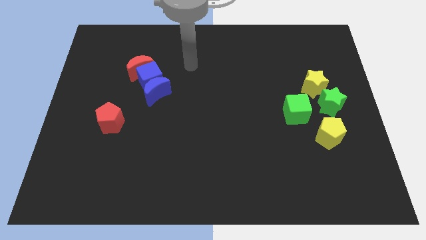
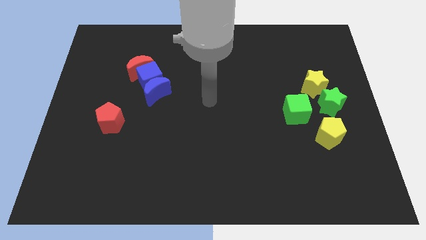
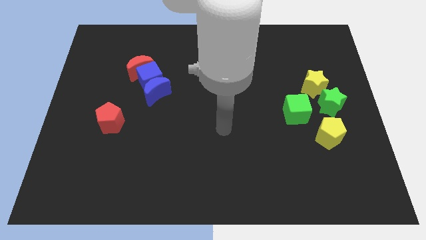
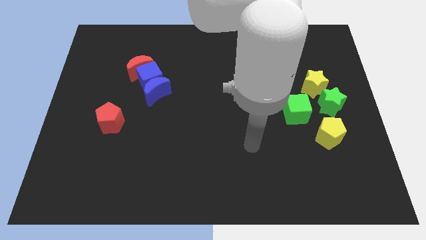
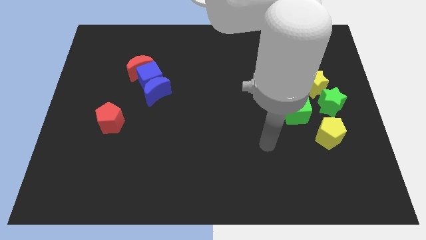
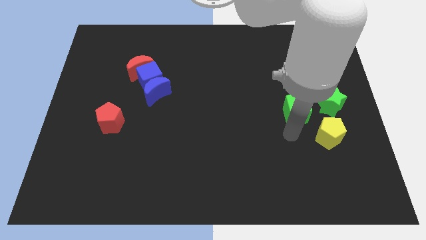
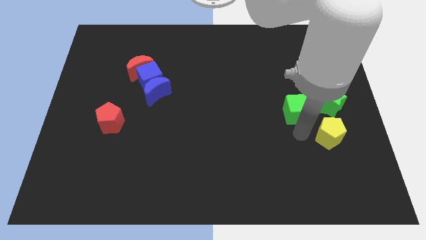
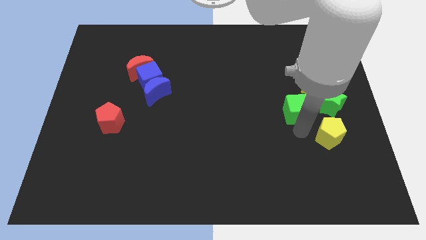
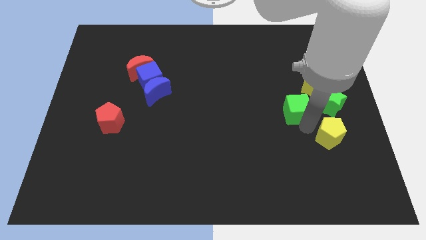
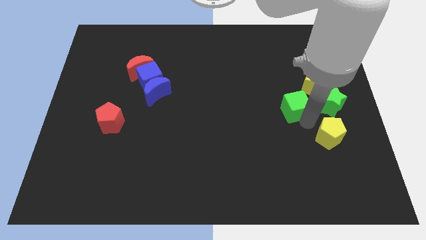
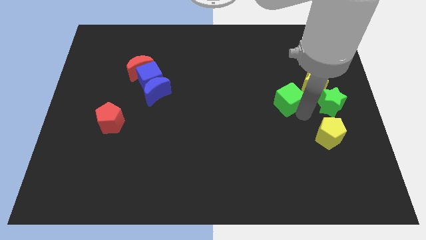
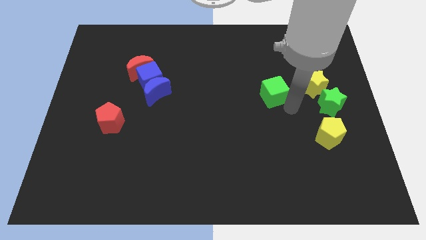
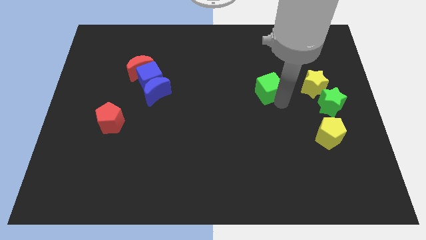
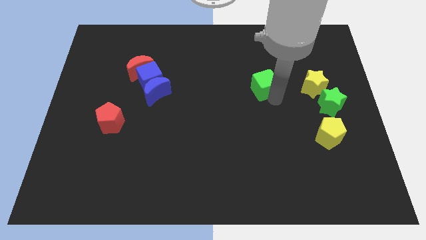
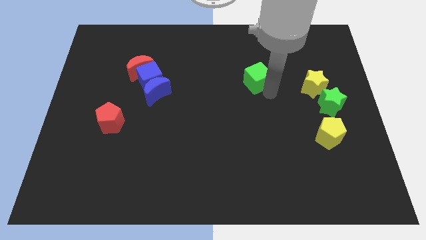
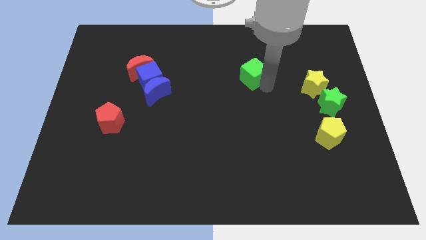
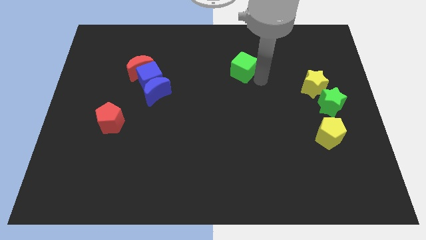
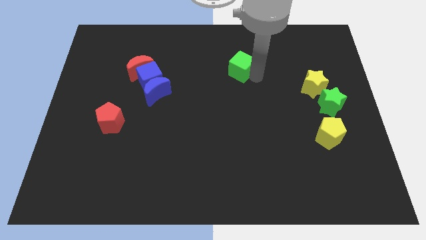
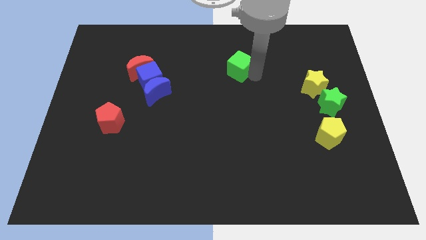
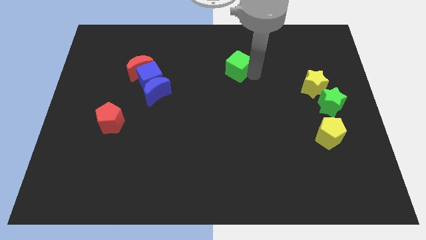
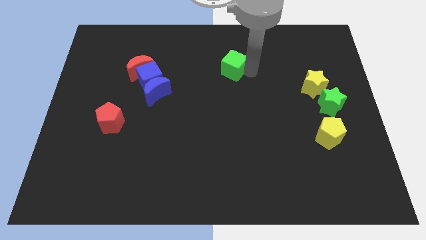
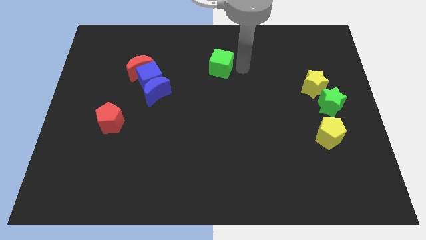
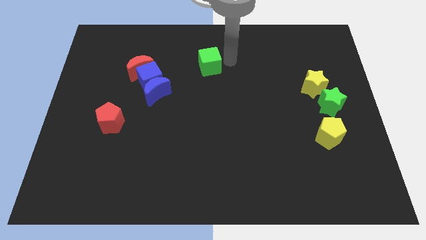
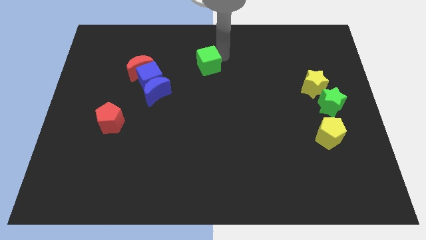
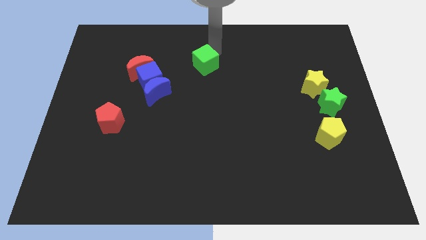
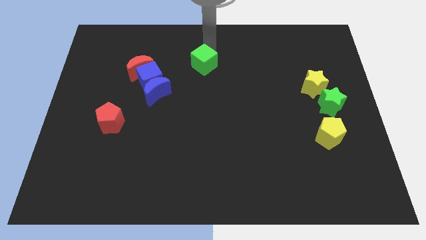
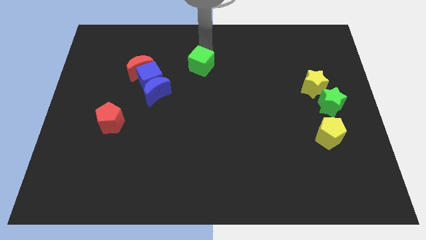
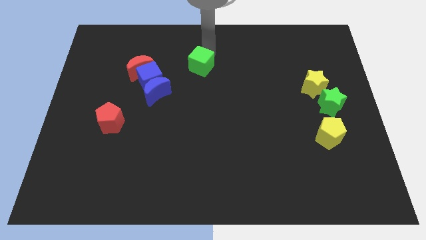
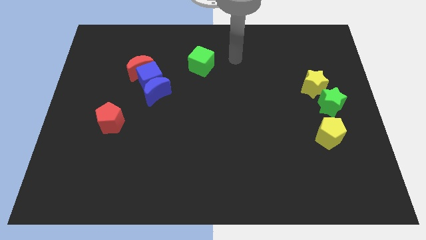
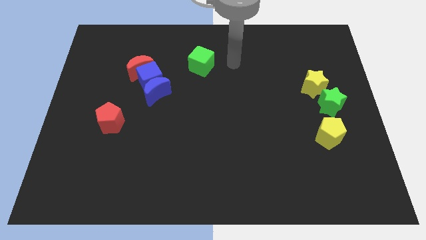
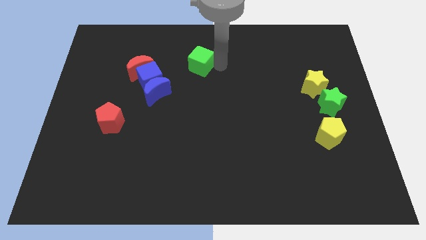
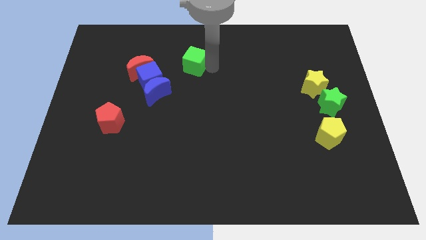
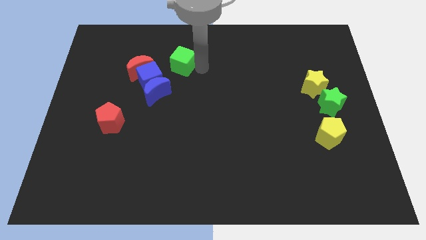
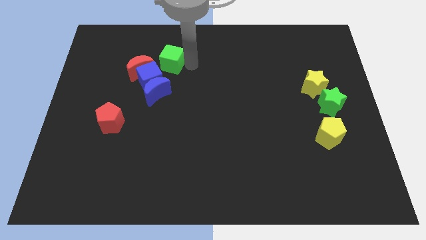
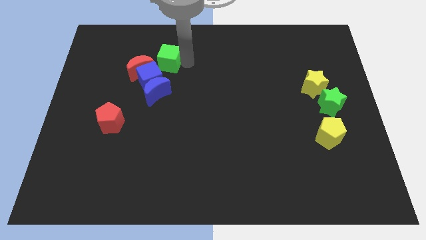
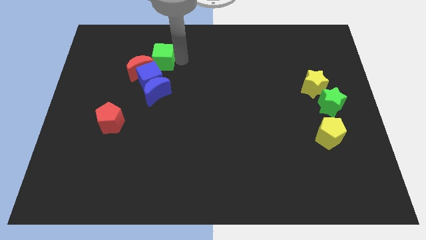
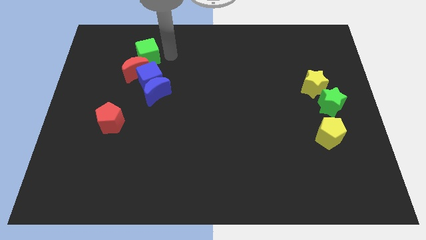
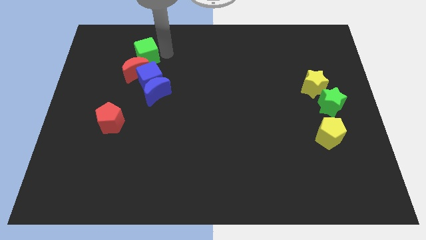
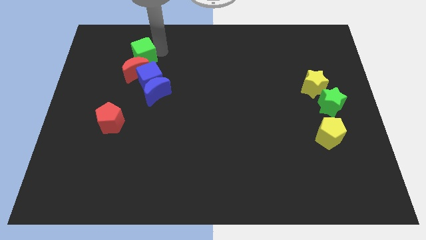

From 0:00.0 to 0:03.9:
move the green cube next to the red moon

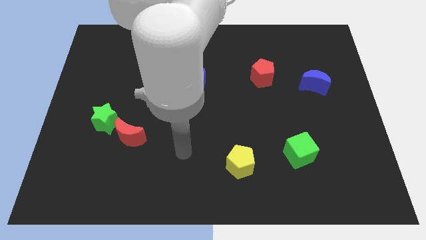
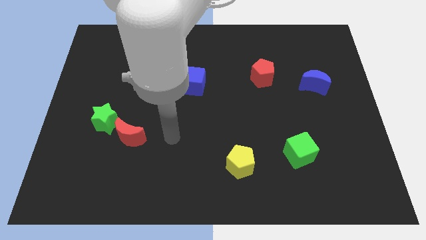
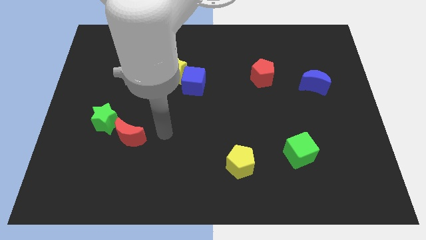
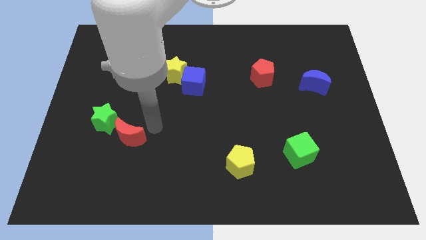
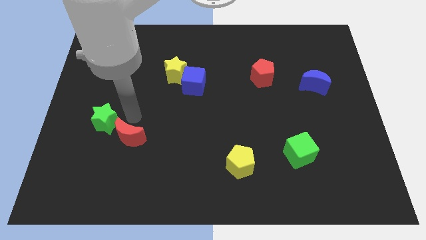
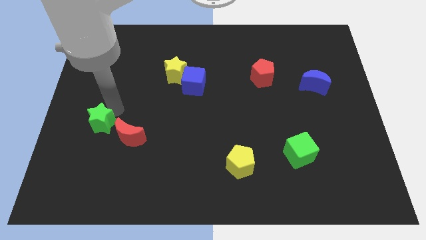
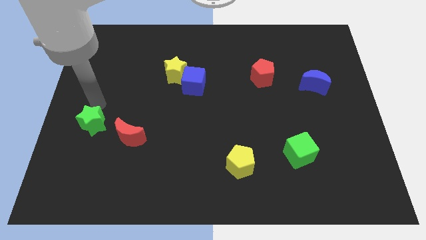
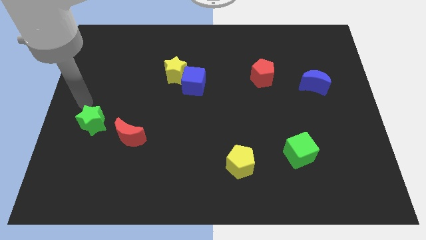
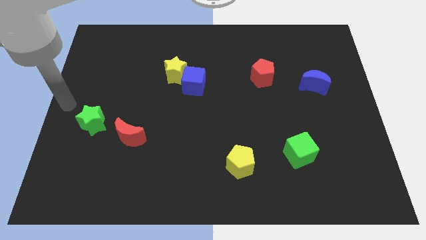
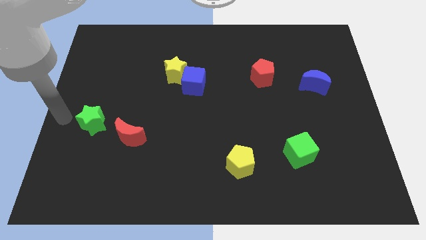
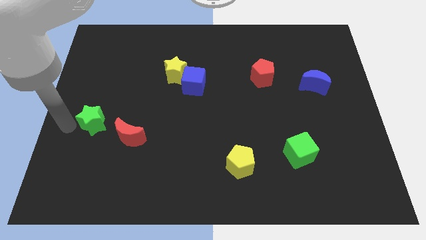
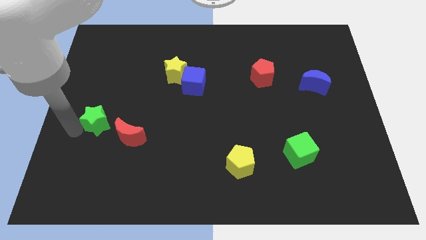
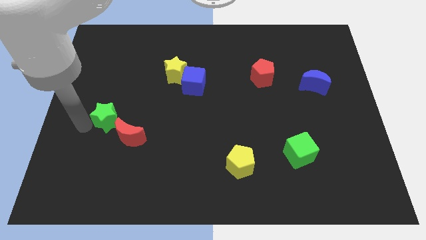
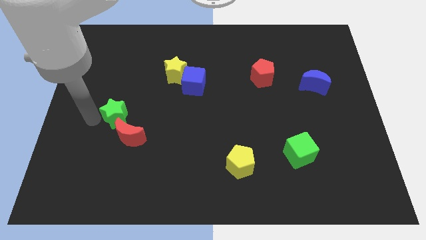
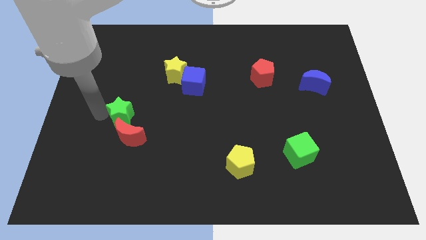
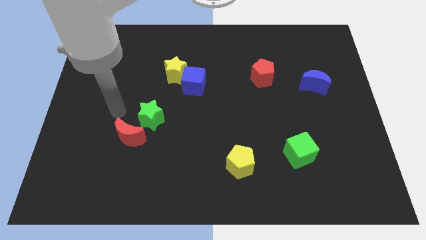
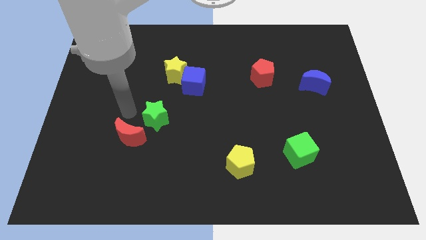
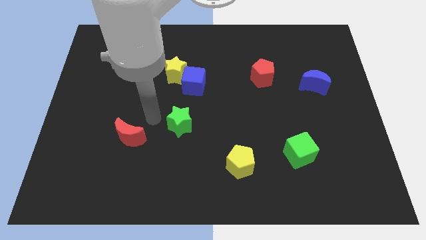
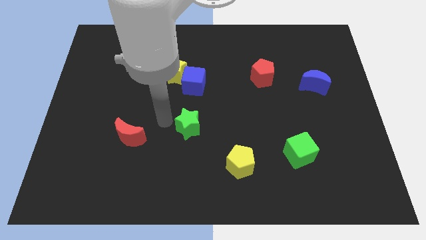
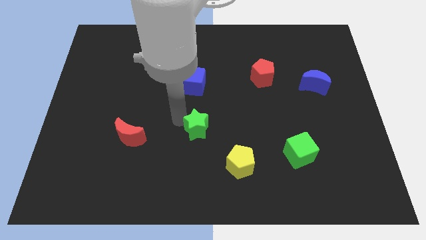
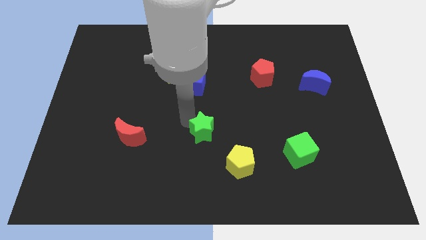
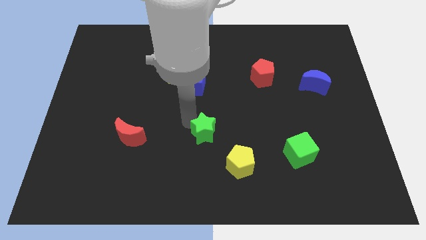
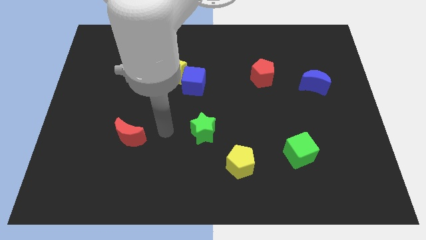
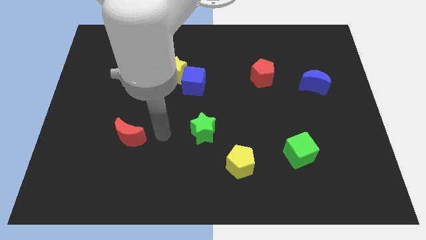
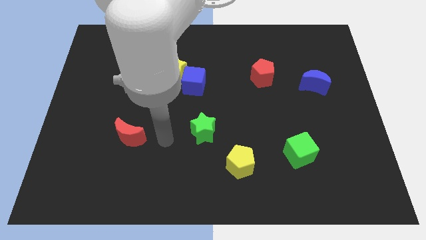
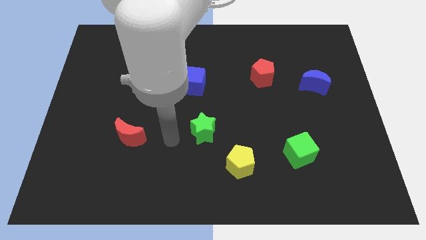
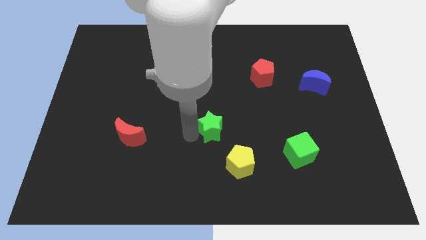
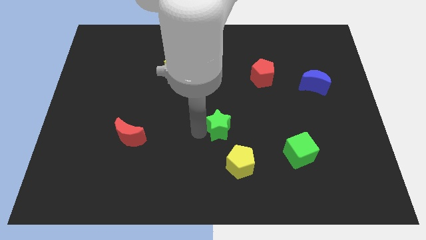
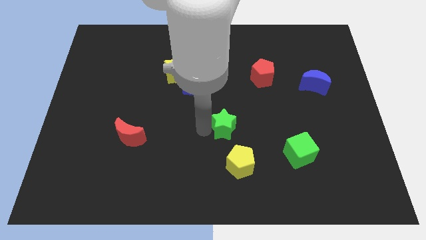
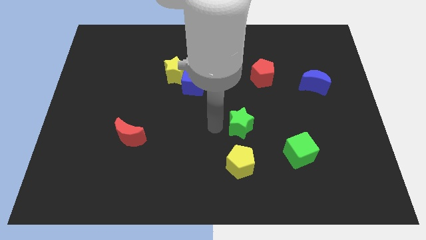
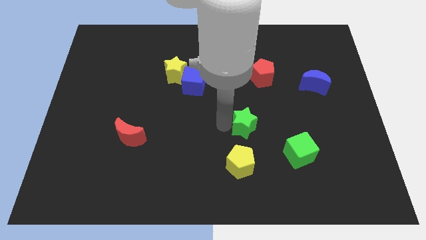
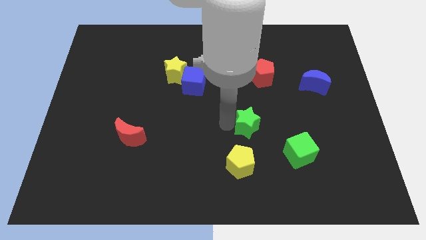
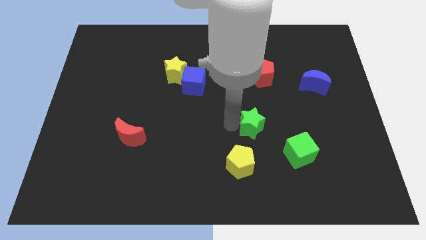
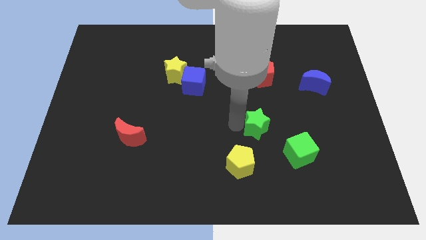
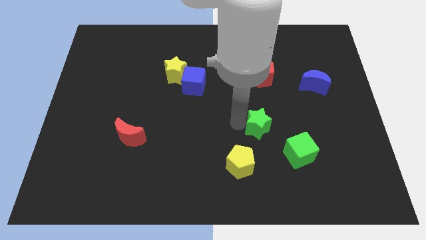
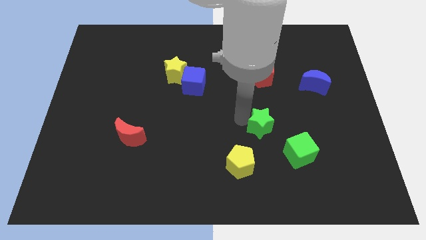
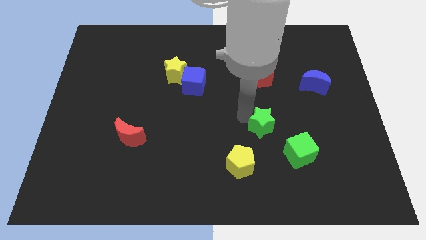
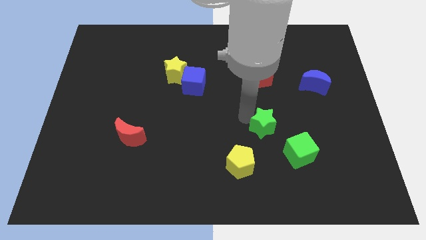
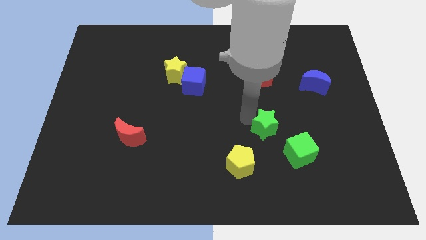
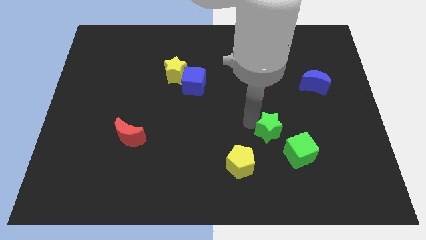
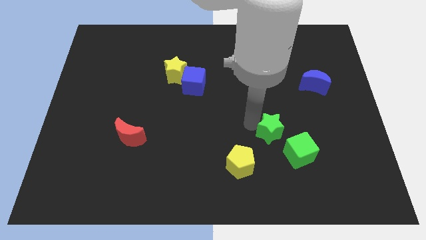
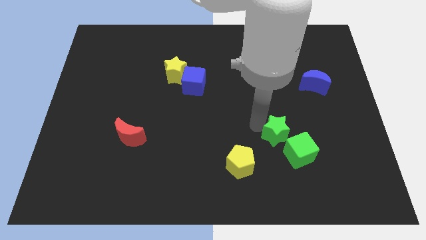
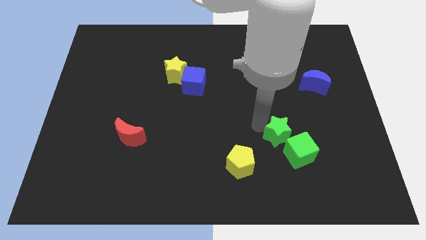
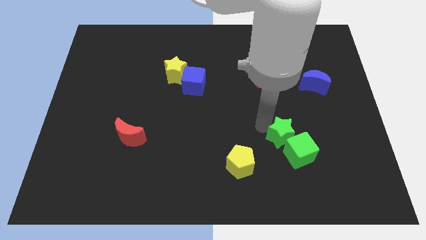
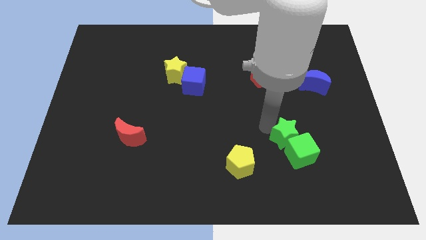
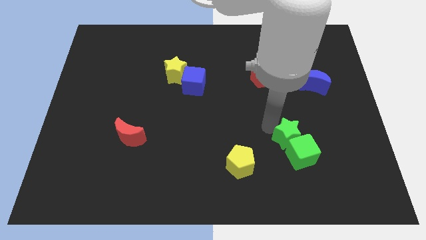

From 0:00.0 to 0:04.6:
move the green star next to the green cube
